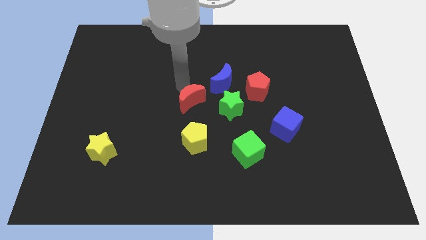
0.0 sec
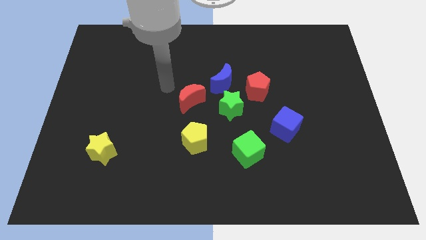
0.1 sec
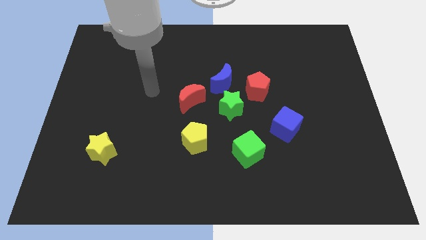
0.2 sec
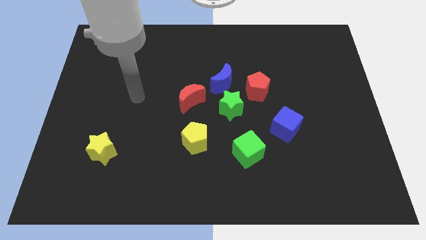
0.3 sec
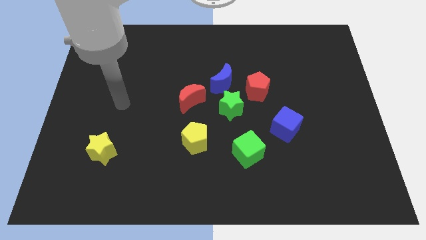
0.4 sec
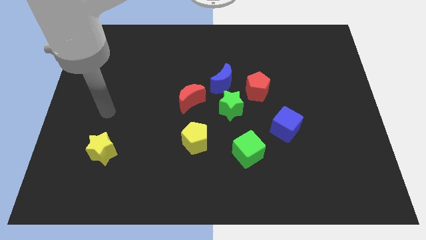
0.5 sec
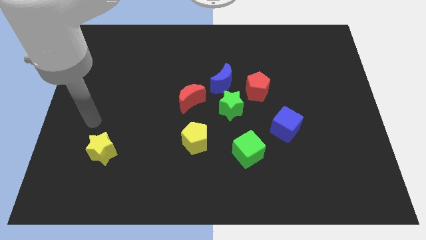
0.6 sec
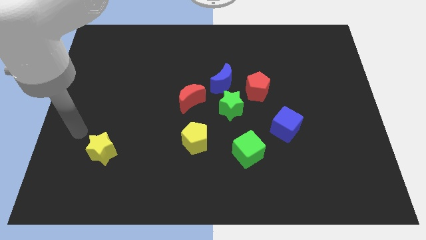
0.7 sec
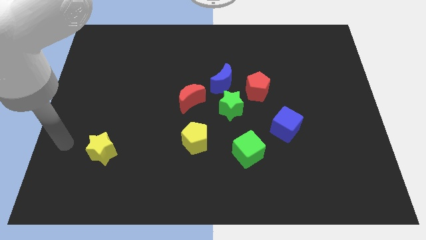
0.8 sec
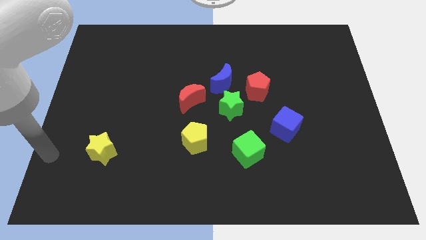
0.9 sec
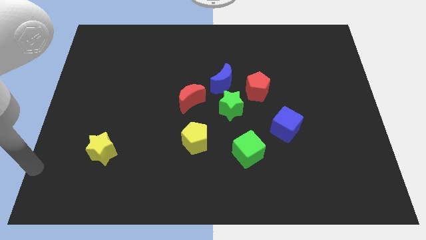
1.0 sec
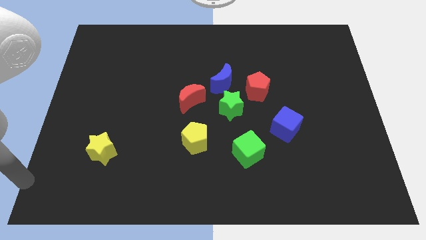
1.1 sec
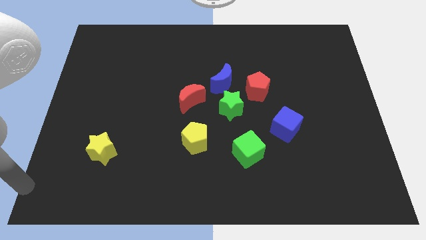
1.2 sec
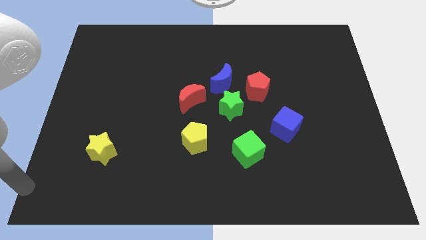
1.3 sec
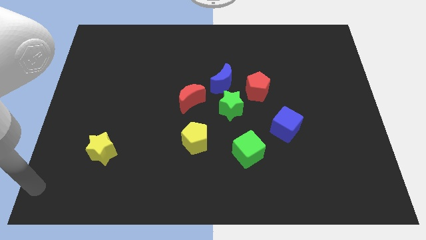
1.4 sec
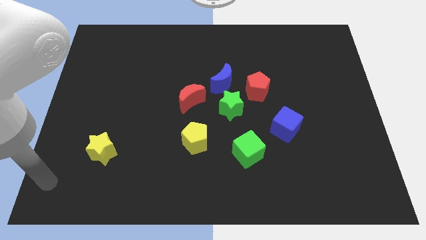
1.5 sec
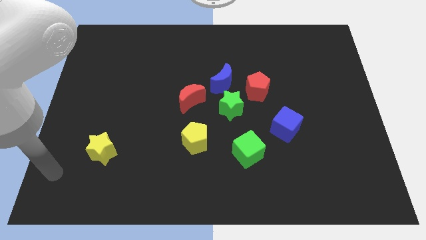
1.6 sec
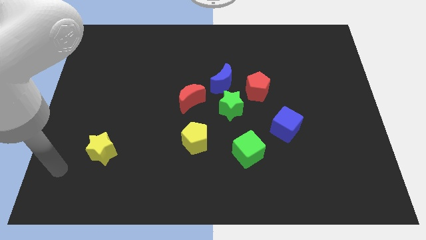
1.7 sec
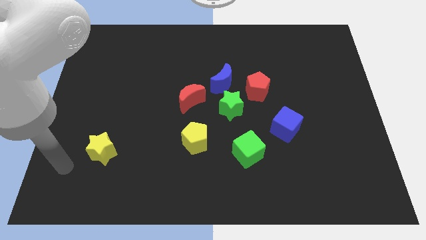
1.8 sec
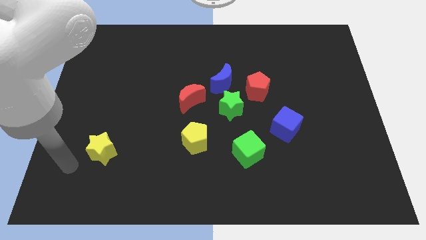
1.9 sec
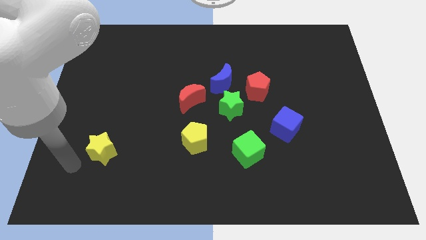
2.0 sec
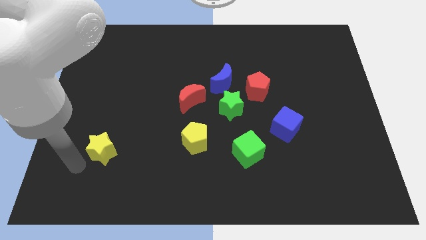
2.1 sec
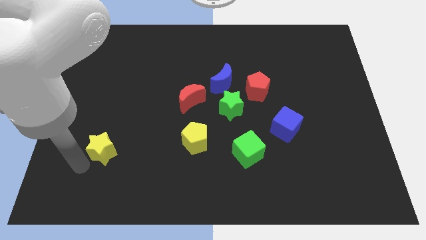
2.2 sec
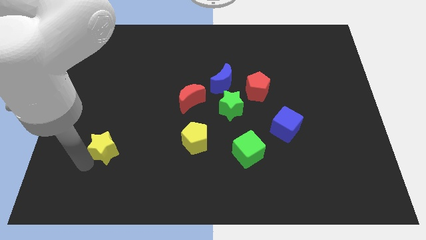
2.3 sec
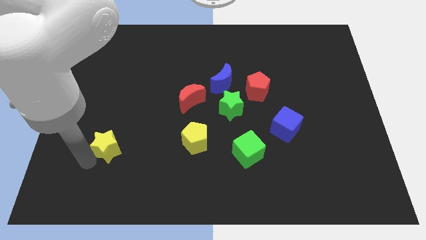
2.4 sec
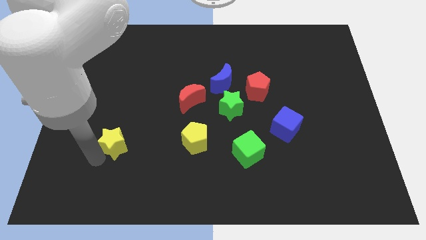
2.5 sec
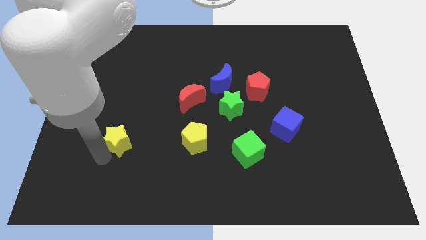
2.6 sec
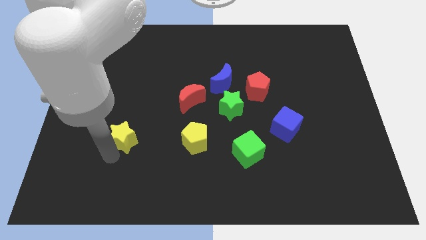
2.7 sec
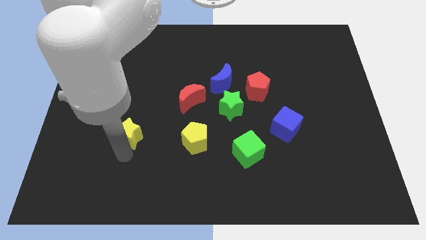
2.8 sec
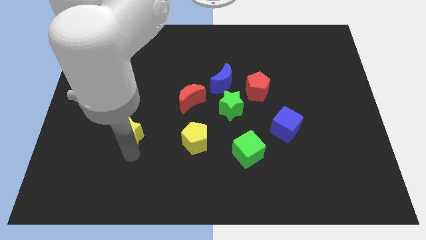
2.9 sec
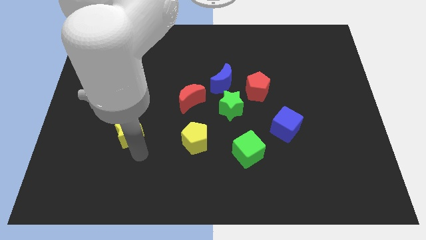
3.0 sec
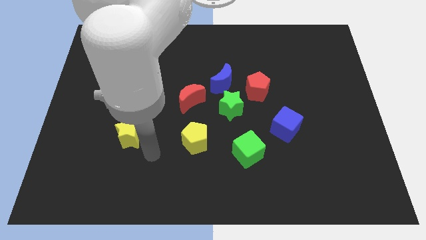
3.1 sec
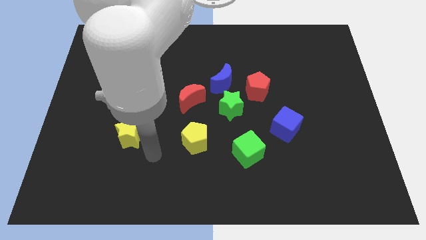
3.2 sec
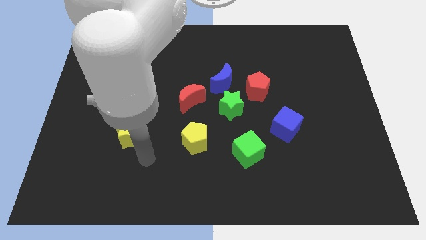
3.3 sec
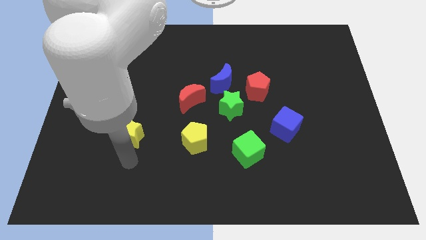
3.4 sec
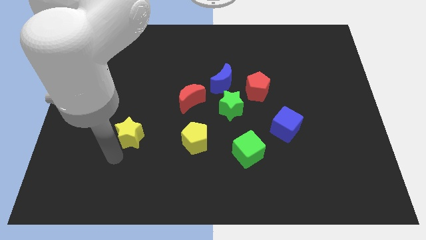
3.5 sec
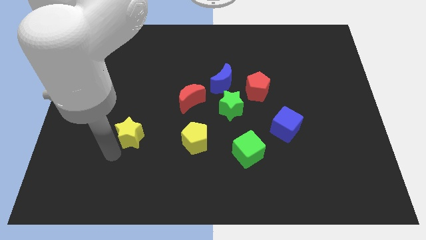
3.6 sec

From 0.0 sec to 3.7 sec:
move the yellow star left to the yellow pentagon

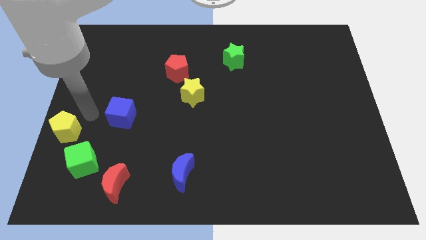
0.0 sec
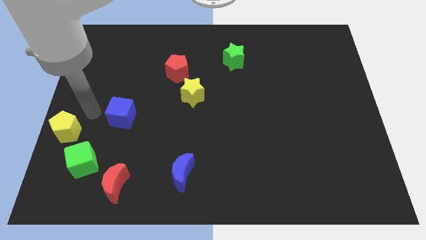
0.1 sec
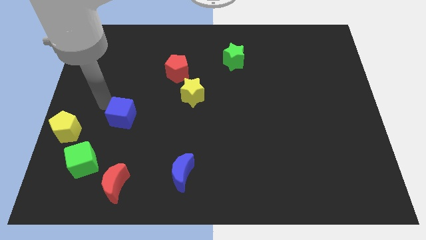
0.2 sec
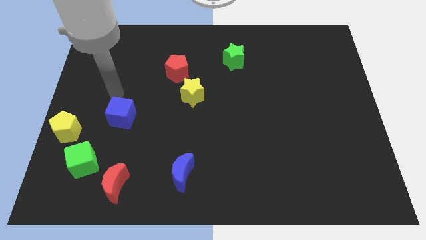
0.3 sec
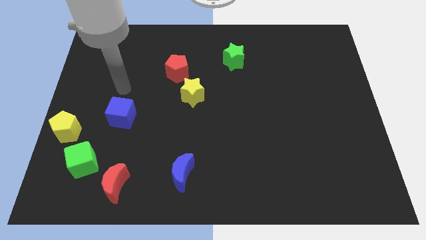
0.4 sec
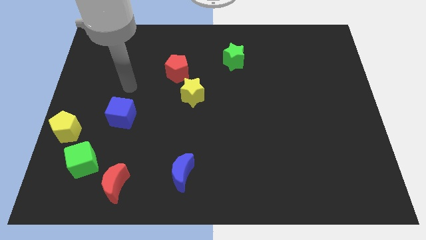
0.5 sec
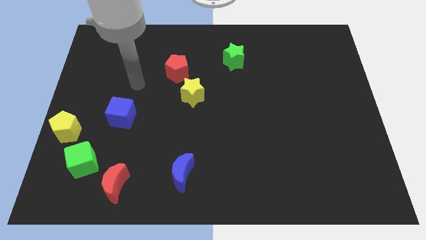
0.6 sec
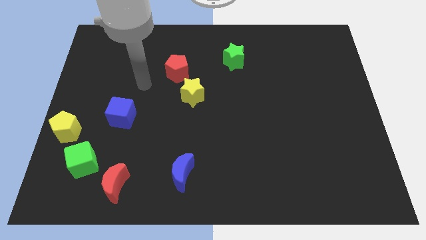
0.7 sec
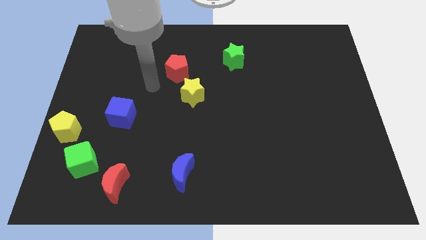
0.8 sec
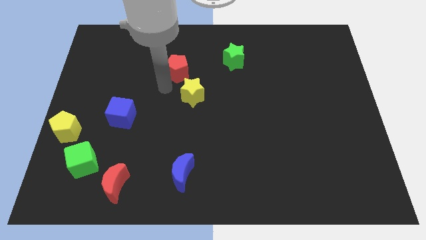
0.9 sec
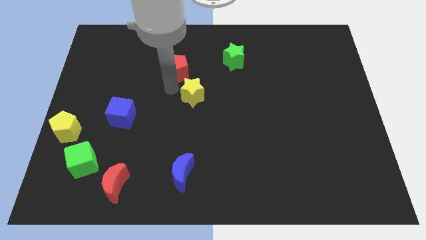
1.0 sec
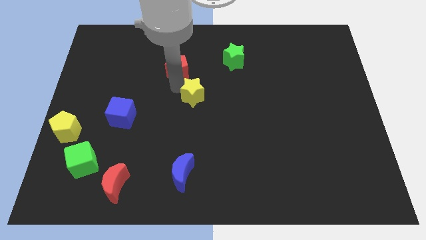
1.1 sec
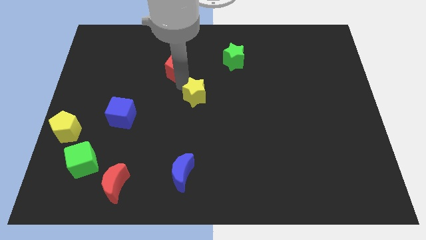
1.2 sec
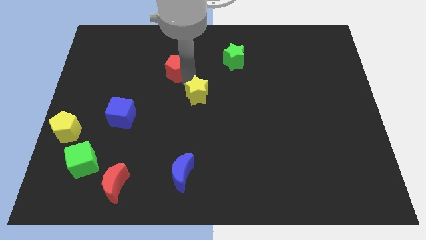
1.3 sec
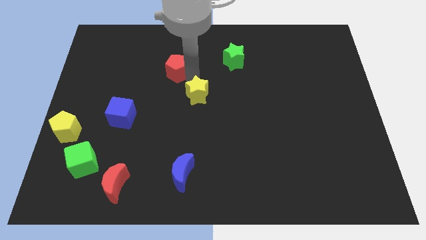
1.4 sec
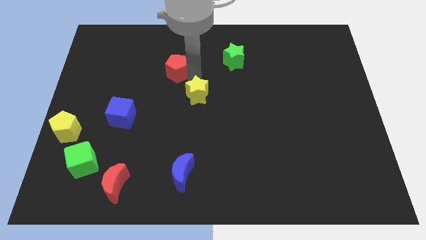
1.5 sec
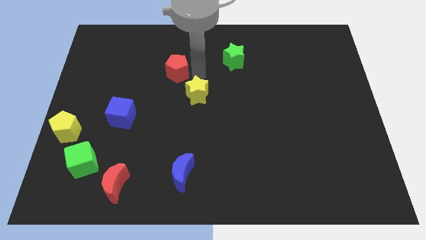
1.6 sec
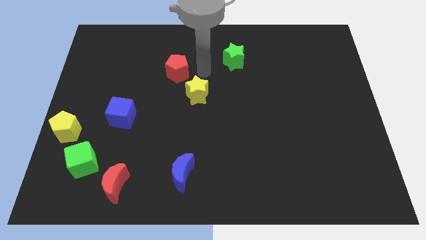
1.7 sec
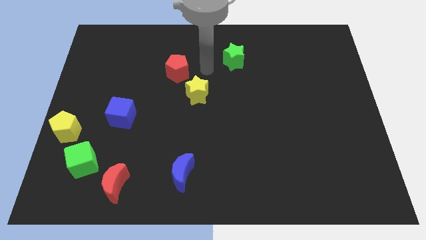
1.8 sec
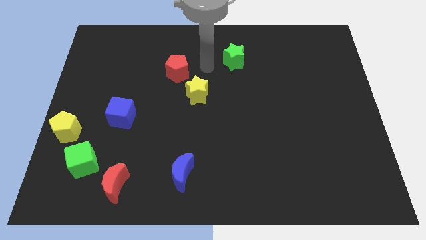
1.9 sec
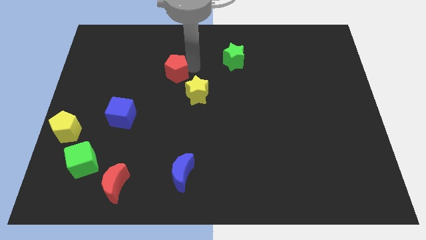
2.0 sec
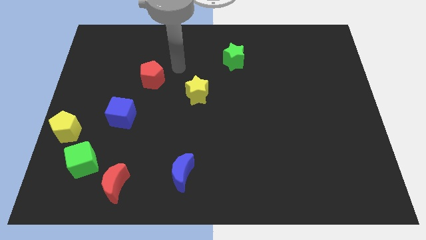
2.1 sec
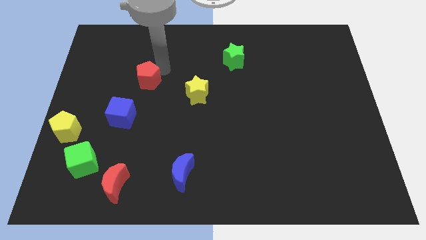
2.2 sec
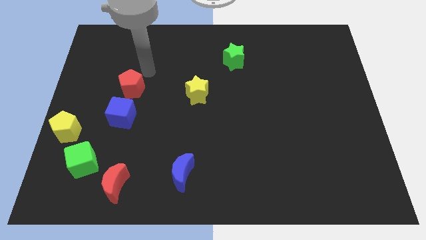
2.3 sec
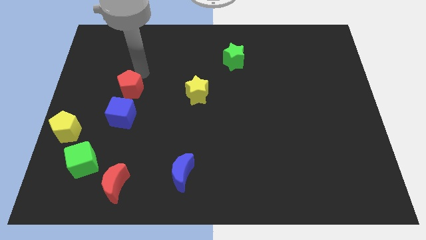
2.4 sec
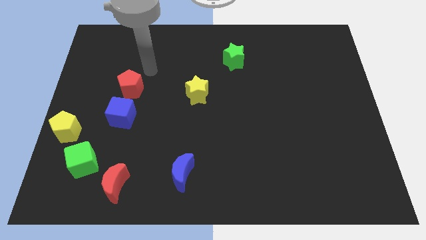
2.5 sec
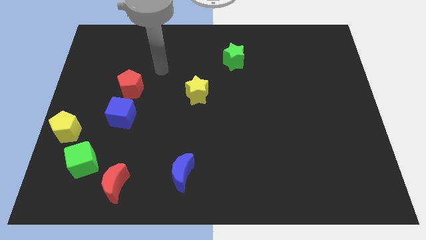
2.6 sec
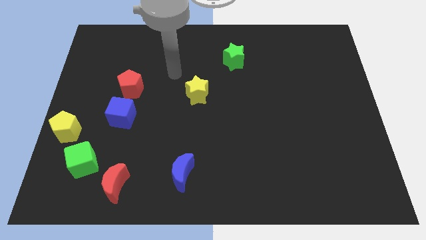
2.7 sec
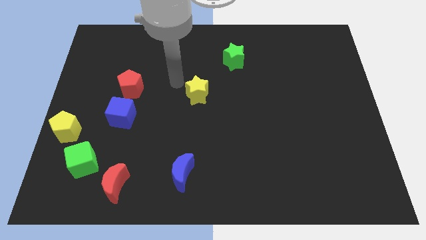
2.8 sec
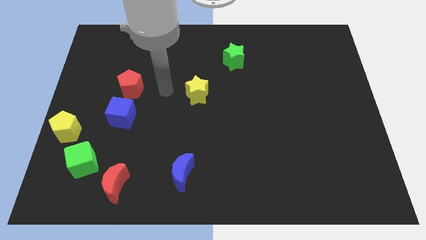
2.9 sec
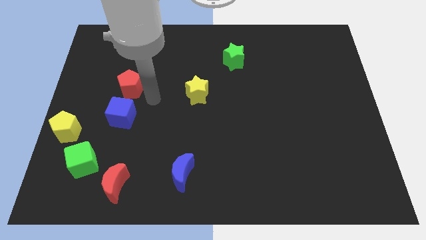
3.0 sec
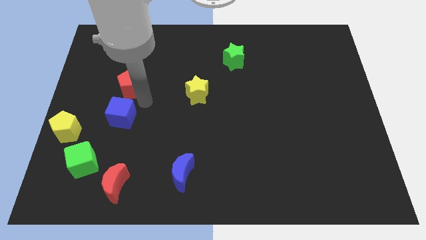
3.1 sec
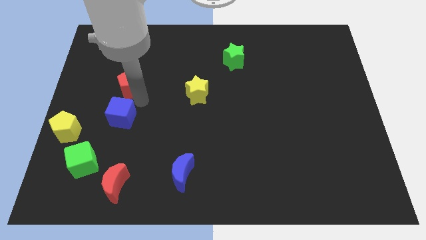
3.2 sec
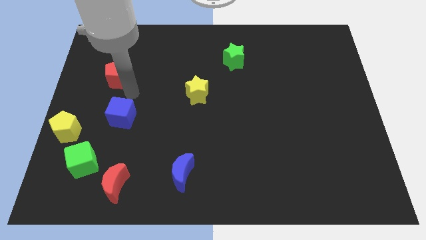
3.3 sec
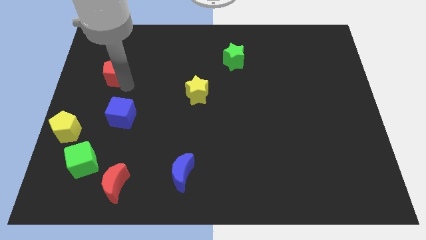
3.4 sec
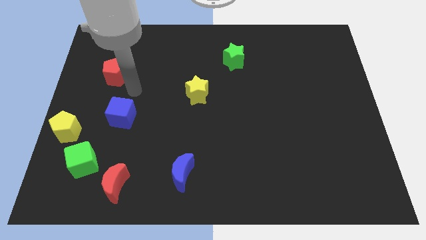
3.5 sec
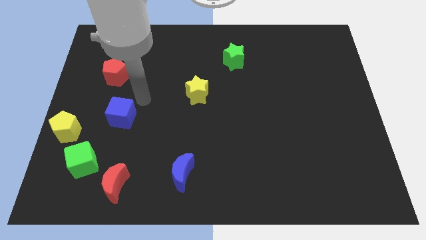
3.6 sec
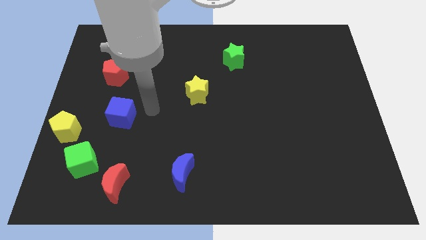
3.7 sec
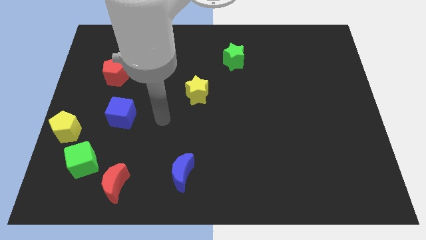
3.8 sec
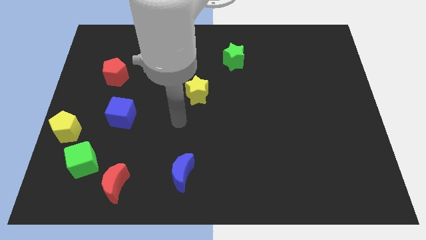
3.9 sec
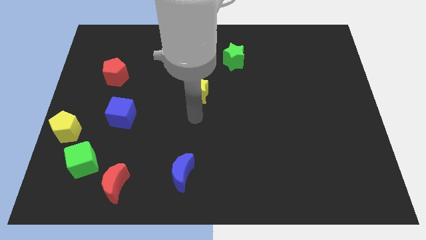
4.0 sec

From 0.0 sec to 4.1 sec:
place the red pentagon diagonally to the yellow pentagon

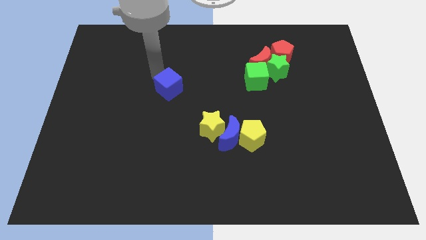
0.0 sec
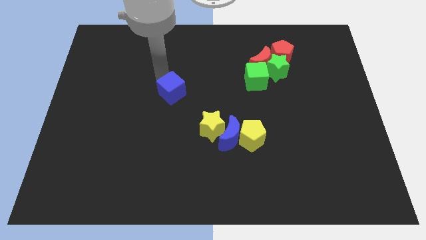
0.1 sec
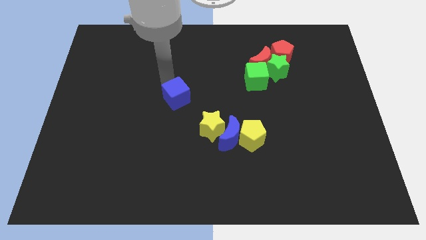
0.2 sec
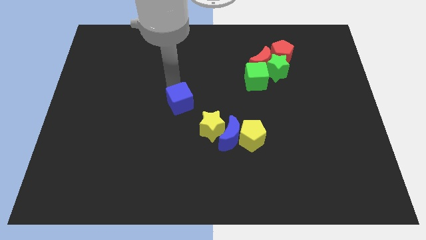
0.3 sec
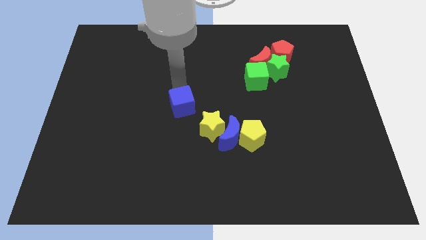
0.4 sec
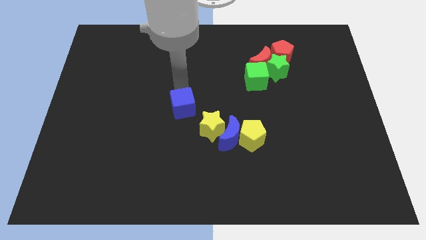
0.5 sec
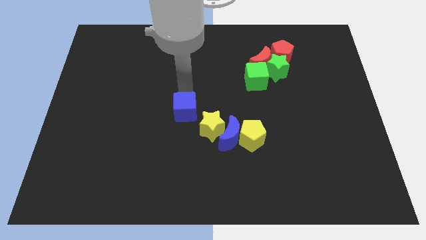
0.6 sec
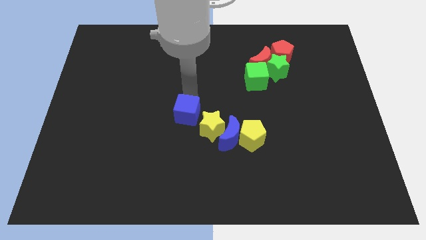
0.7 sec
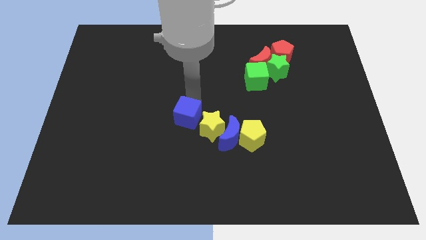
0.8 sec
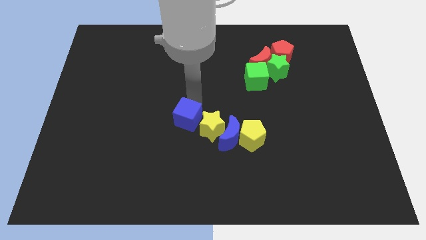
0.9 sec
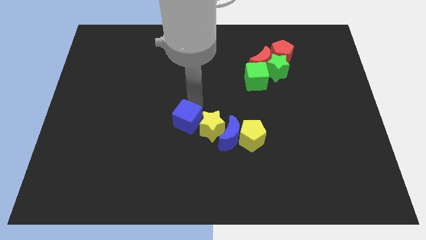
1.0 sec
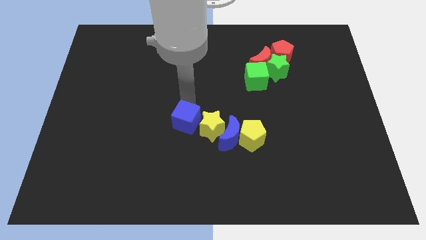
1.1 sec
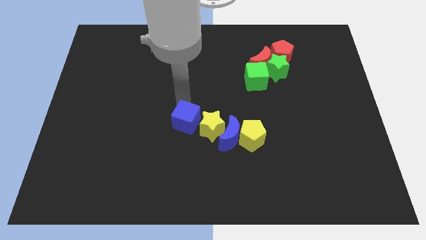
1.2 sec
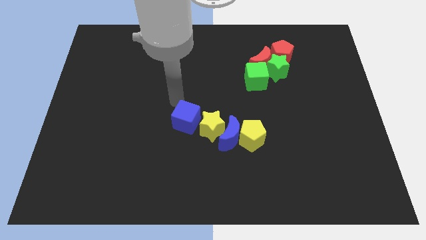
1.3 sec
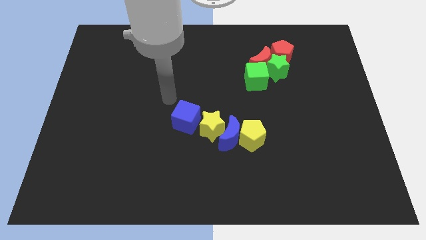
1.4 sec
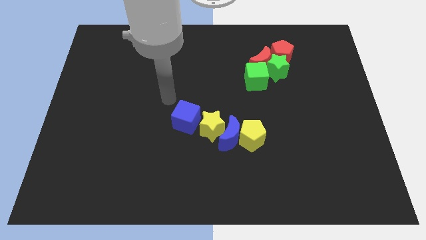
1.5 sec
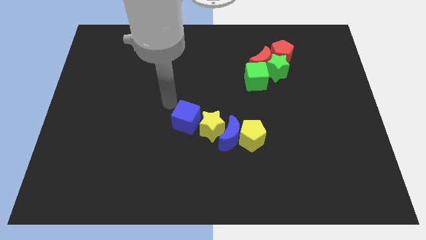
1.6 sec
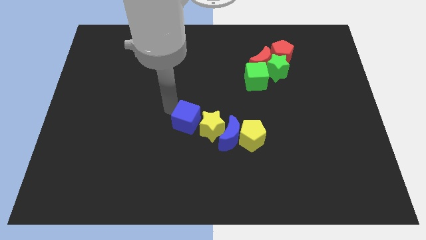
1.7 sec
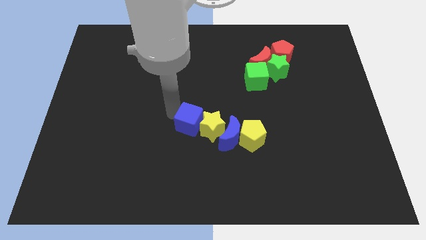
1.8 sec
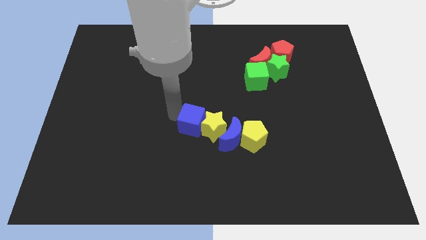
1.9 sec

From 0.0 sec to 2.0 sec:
move blue cube beside yellow star
